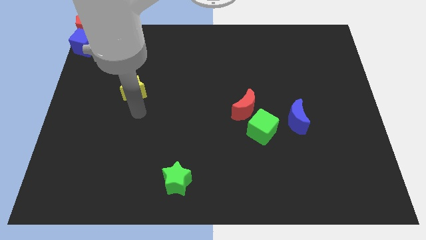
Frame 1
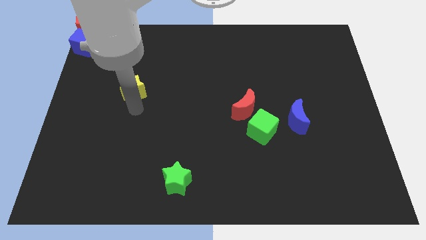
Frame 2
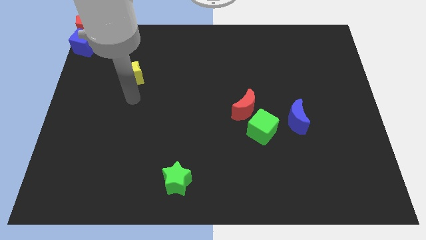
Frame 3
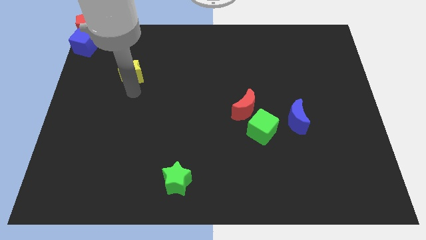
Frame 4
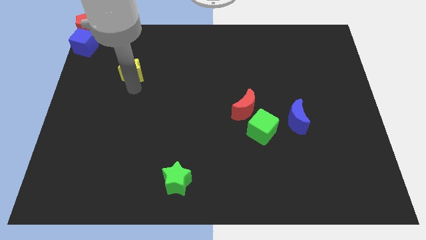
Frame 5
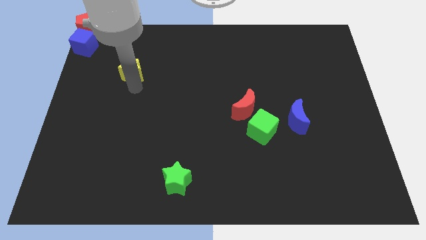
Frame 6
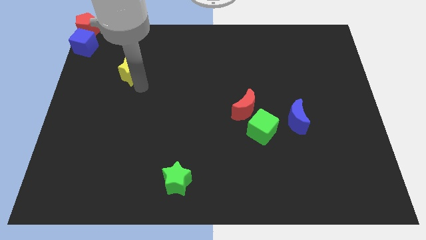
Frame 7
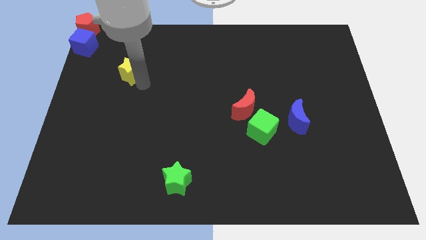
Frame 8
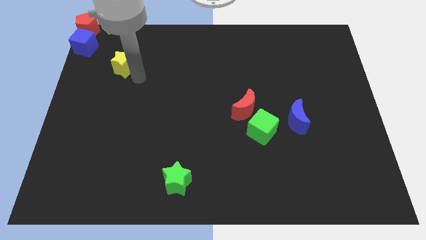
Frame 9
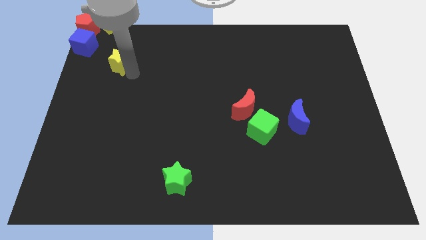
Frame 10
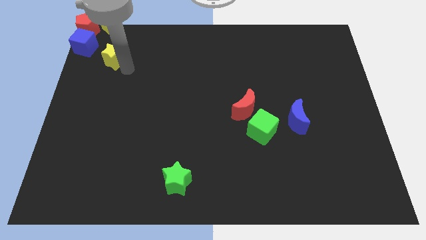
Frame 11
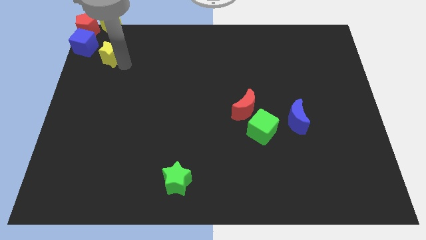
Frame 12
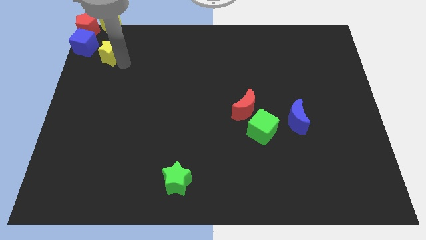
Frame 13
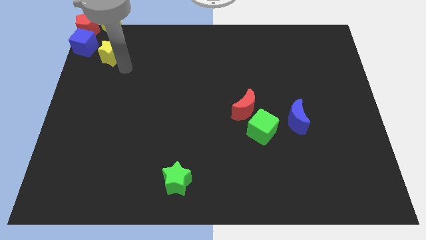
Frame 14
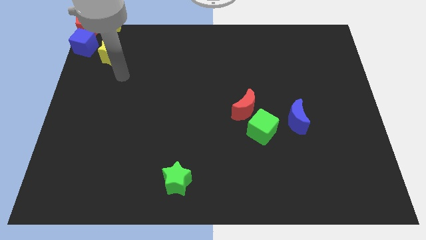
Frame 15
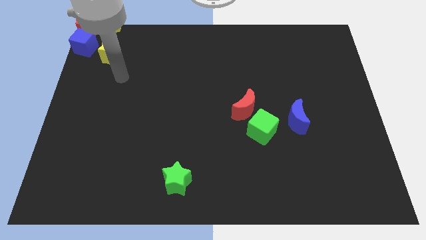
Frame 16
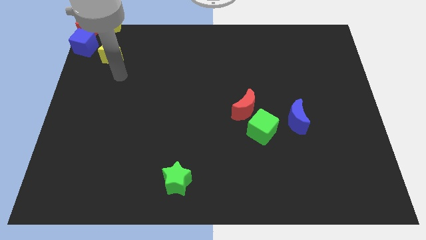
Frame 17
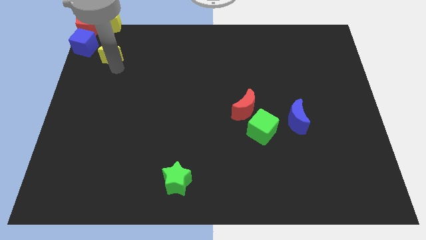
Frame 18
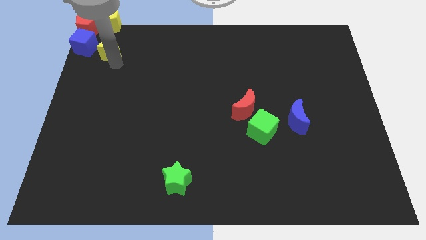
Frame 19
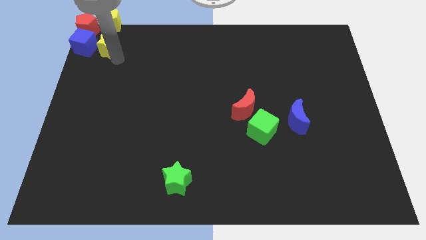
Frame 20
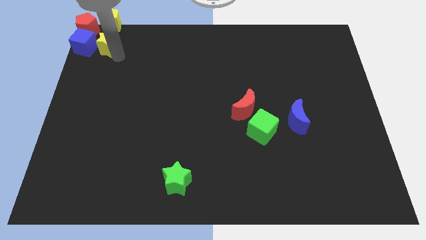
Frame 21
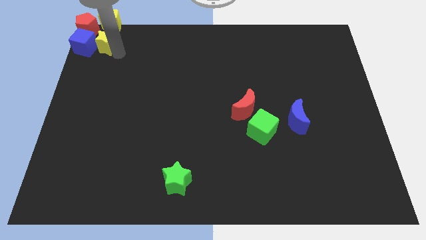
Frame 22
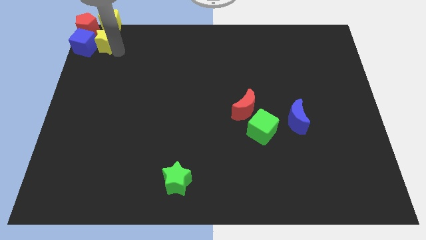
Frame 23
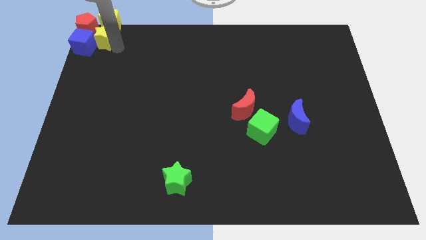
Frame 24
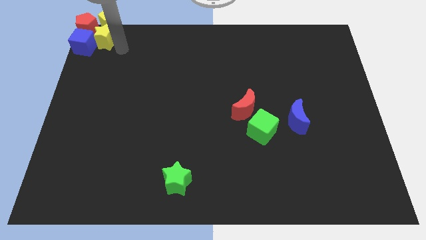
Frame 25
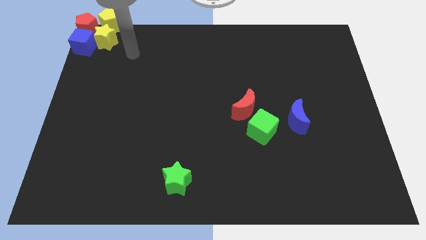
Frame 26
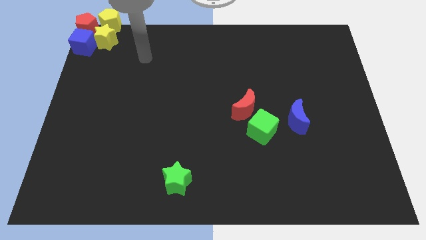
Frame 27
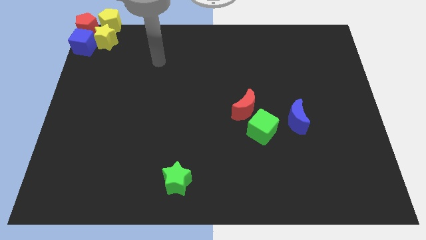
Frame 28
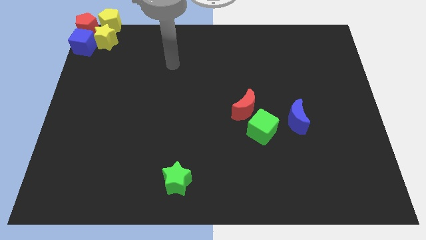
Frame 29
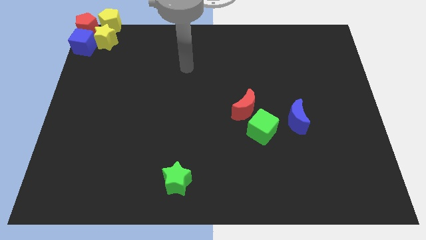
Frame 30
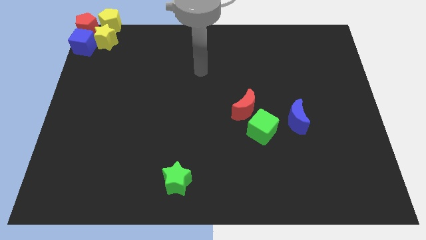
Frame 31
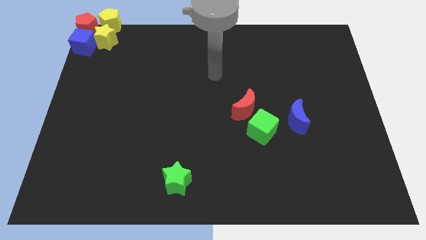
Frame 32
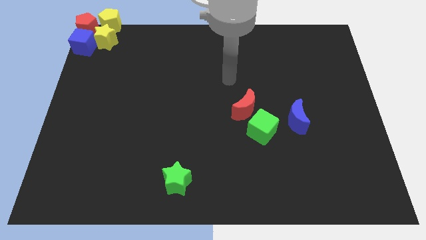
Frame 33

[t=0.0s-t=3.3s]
push the yellow star vertically below the yellow pentagon

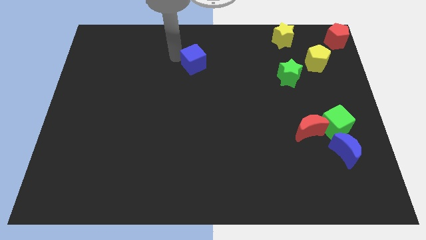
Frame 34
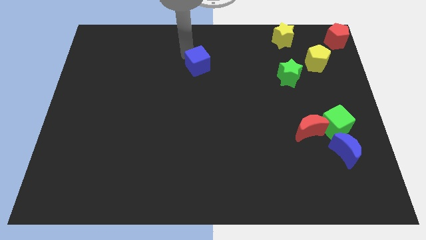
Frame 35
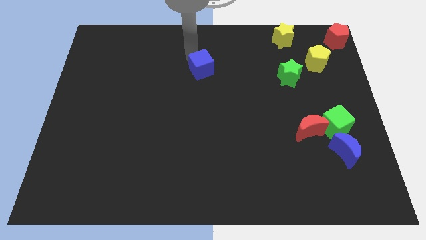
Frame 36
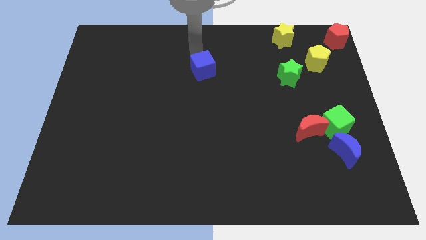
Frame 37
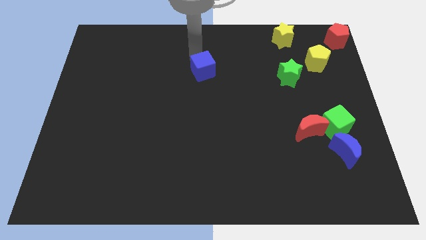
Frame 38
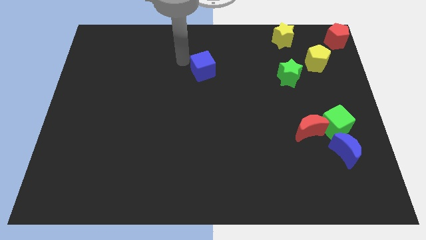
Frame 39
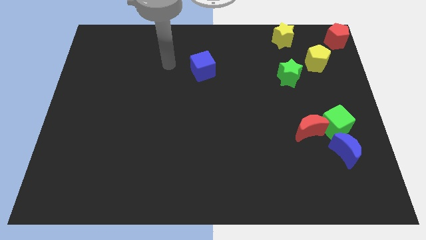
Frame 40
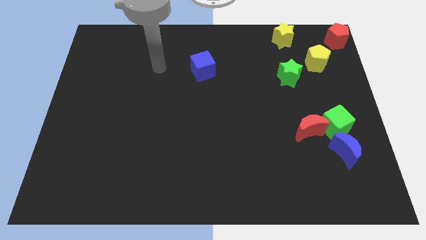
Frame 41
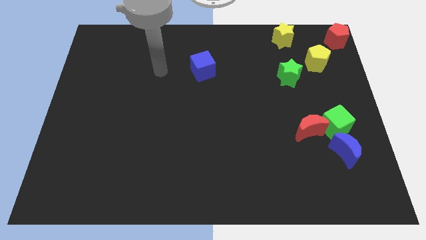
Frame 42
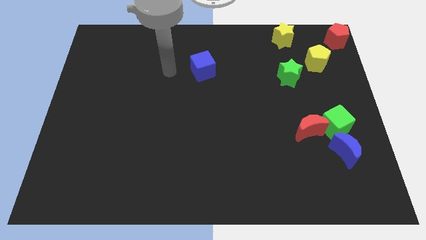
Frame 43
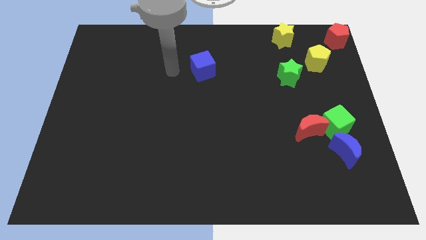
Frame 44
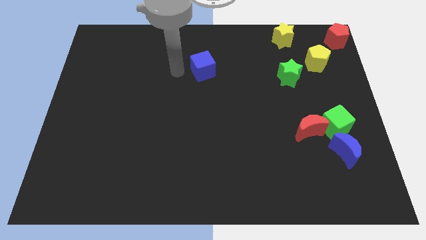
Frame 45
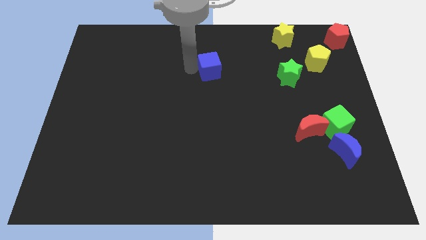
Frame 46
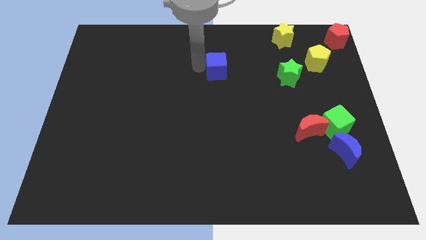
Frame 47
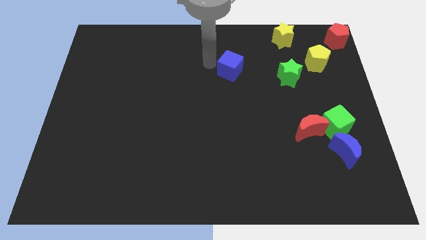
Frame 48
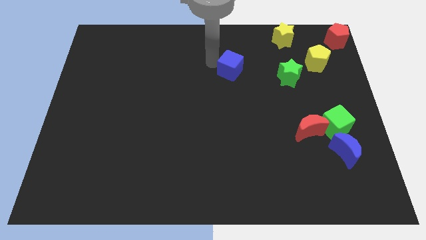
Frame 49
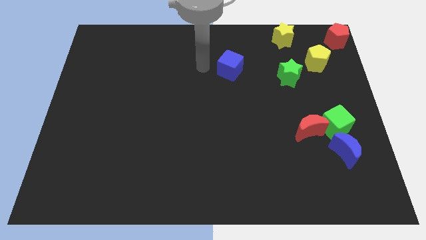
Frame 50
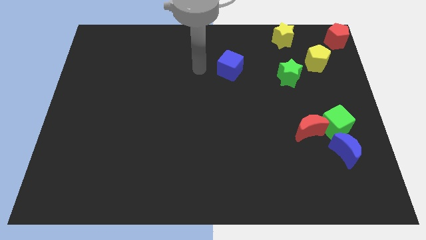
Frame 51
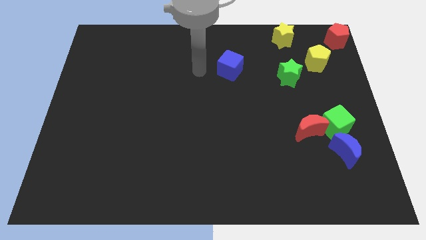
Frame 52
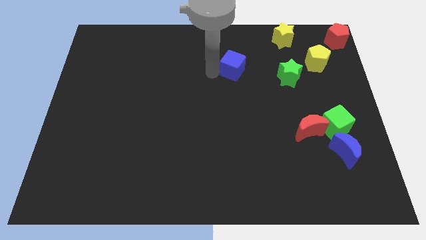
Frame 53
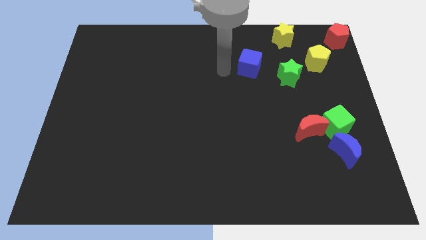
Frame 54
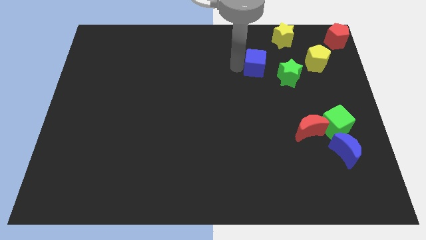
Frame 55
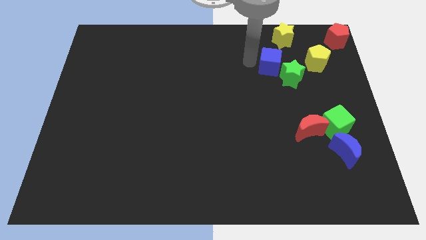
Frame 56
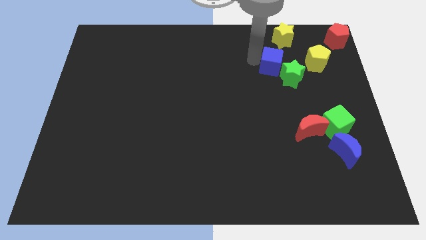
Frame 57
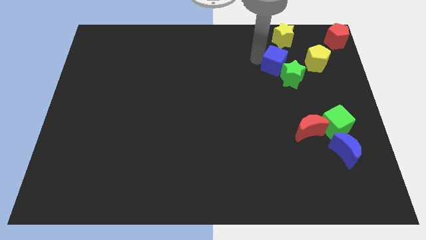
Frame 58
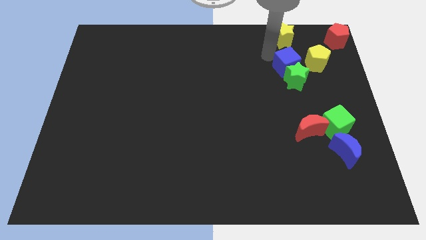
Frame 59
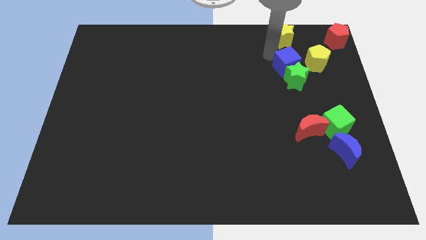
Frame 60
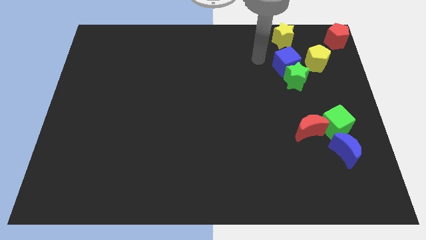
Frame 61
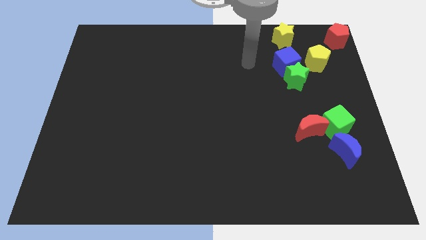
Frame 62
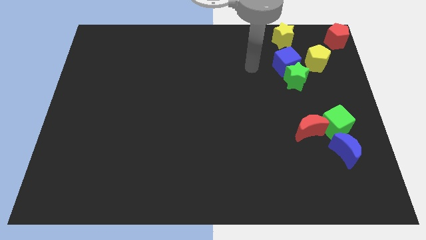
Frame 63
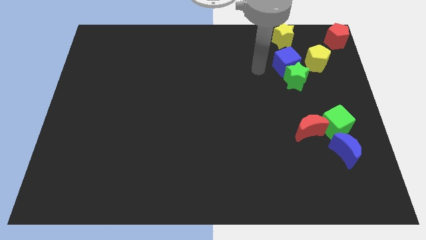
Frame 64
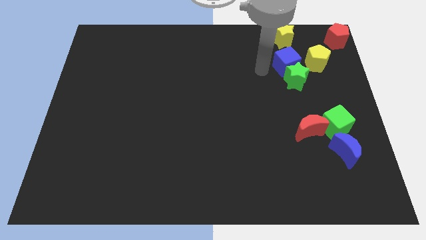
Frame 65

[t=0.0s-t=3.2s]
push the blue cube into the group of blocks

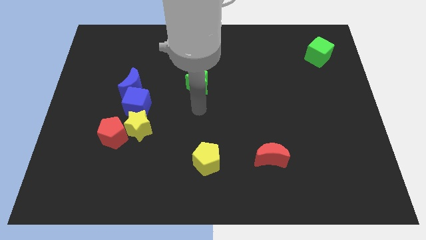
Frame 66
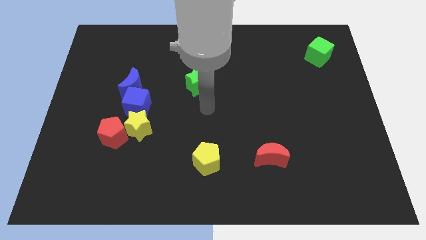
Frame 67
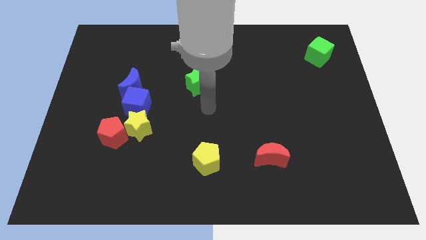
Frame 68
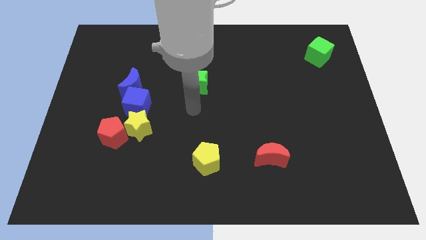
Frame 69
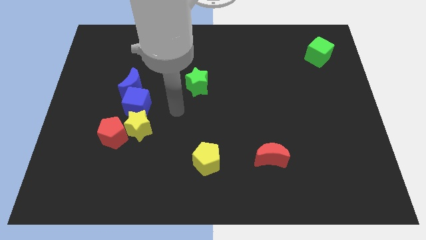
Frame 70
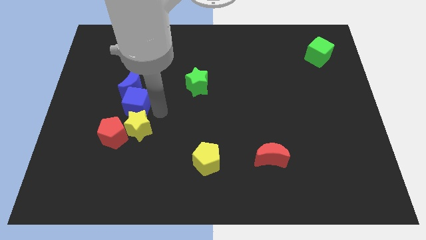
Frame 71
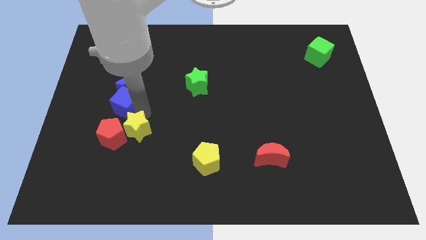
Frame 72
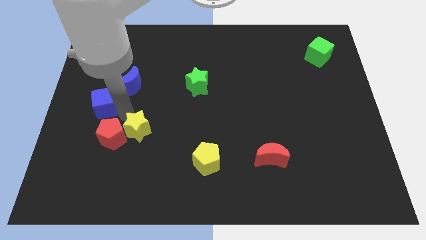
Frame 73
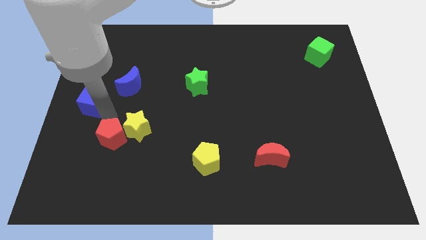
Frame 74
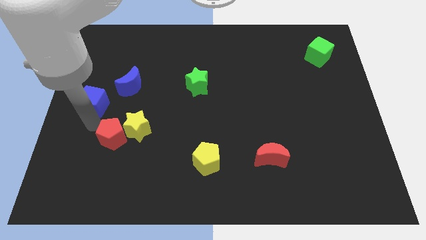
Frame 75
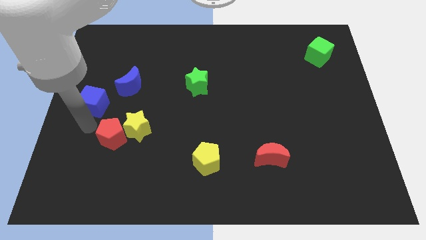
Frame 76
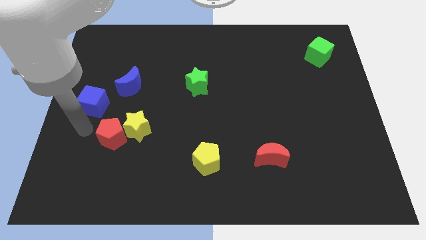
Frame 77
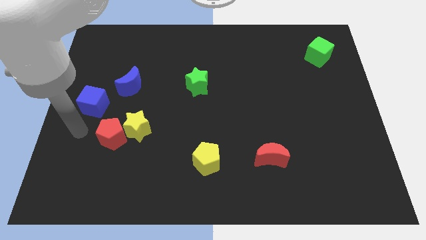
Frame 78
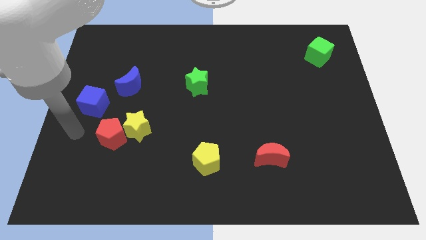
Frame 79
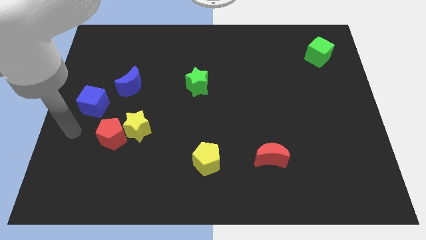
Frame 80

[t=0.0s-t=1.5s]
move the blue cube towards left

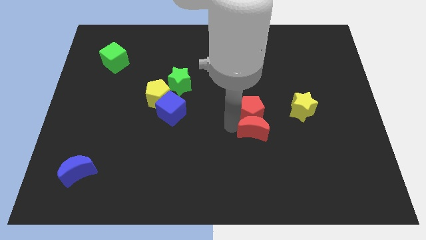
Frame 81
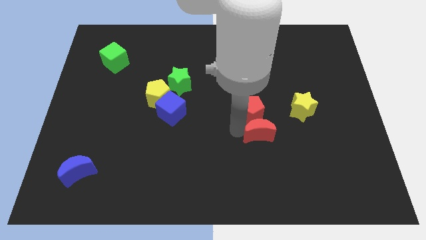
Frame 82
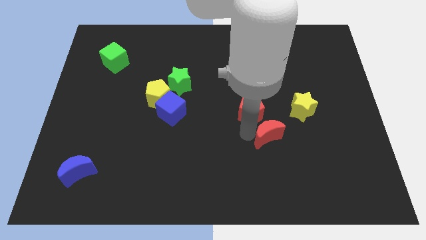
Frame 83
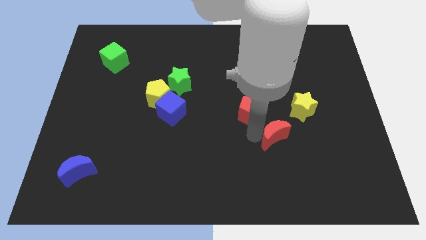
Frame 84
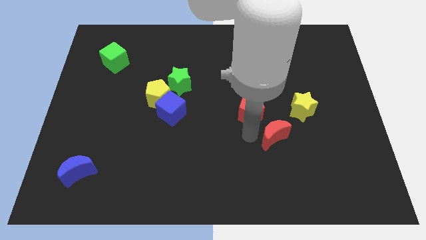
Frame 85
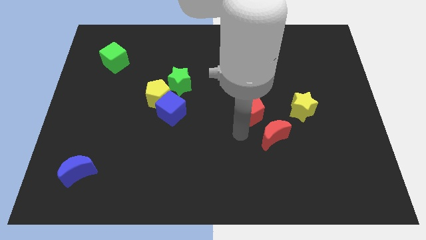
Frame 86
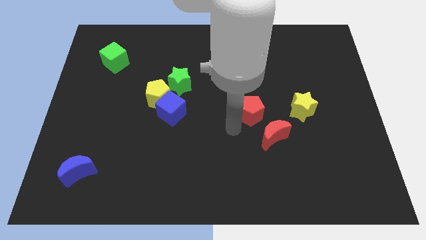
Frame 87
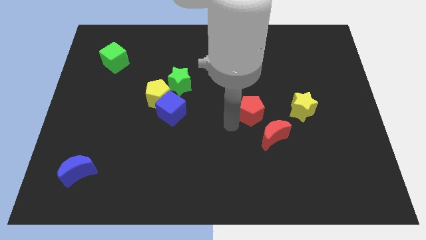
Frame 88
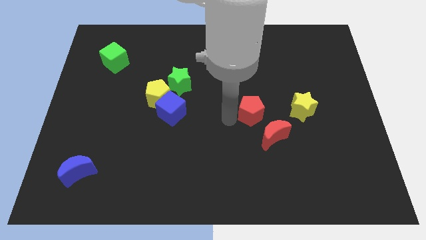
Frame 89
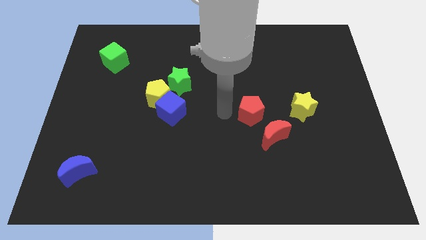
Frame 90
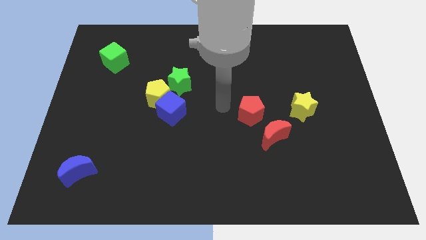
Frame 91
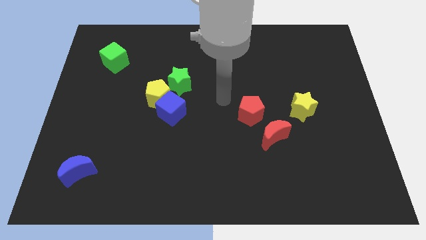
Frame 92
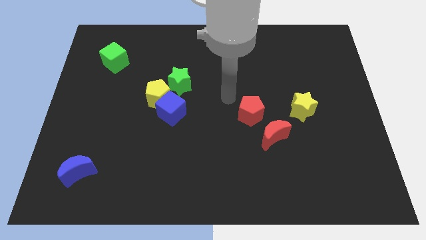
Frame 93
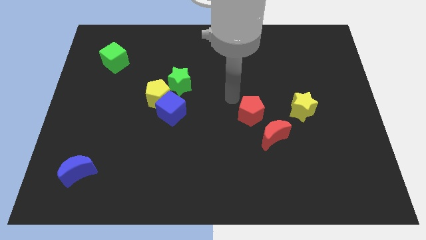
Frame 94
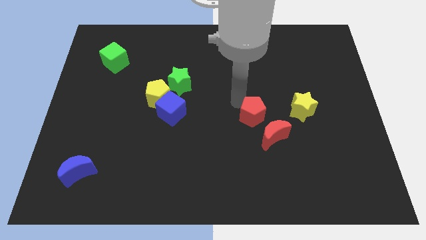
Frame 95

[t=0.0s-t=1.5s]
place red crescent below the red pentagon
